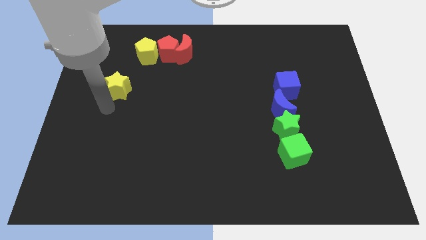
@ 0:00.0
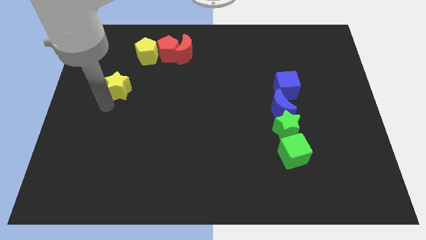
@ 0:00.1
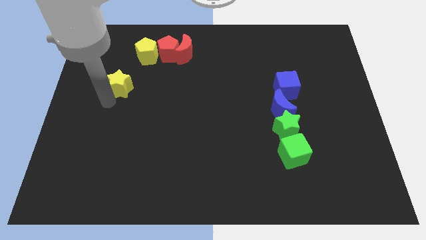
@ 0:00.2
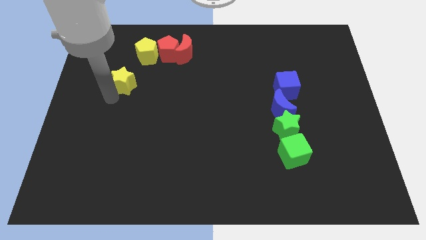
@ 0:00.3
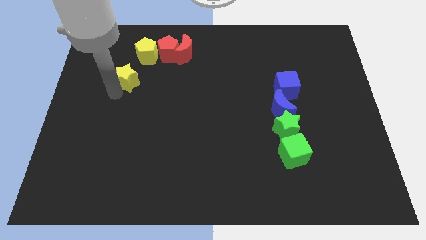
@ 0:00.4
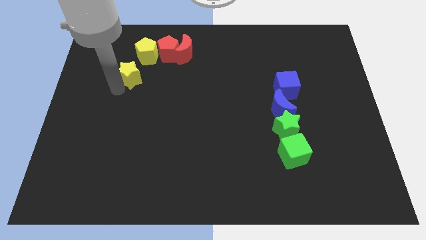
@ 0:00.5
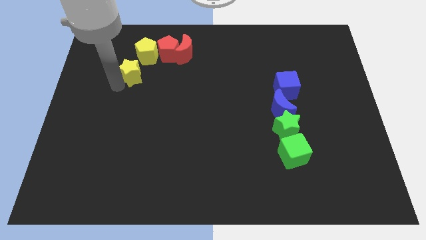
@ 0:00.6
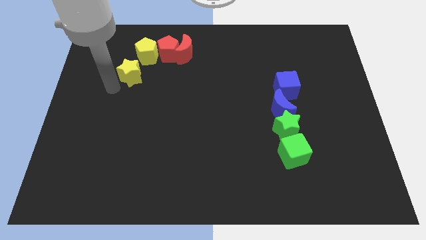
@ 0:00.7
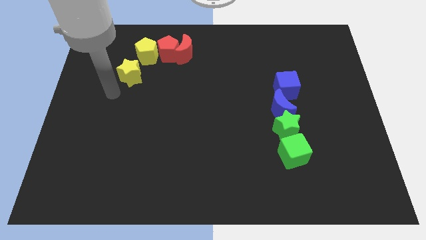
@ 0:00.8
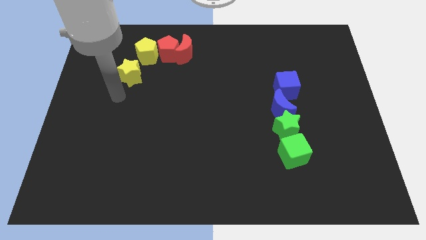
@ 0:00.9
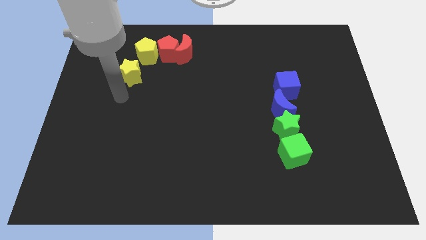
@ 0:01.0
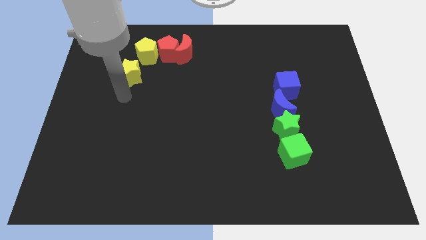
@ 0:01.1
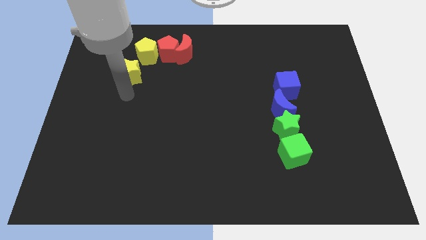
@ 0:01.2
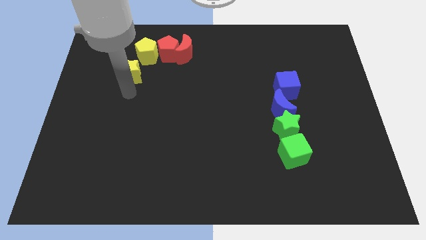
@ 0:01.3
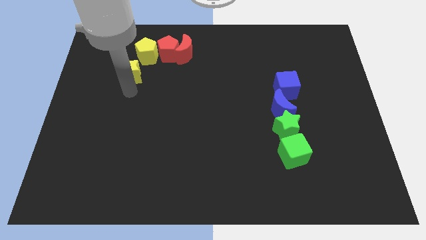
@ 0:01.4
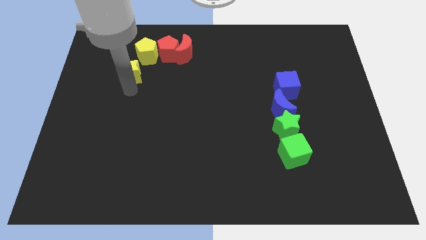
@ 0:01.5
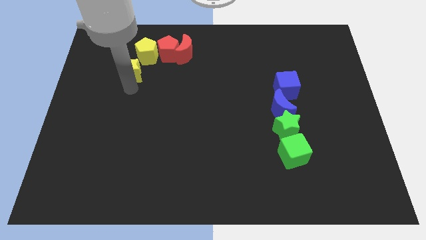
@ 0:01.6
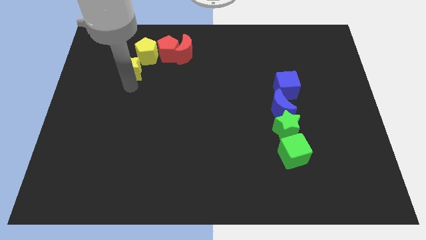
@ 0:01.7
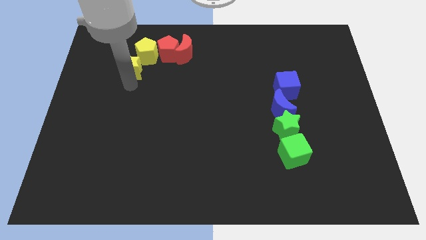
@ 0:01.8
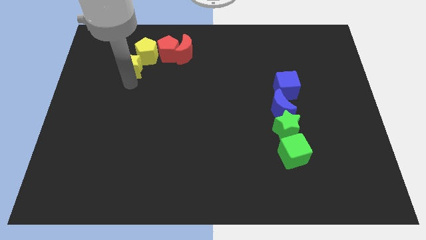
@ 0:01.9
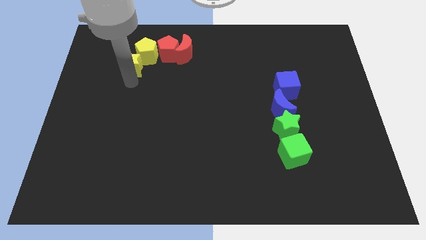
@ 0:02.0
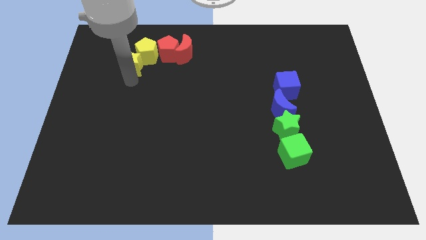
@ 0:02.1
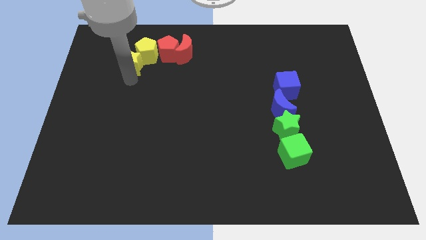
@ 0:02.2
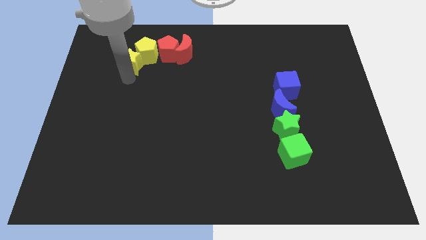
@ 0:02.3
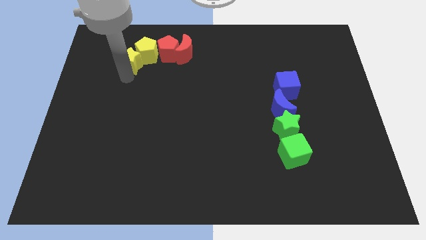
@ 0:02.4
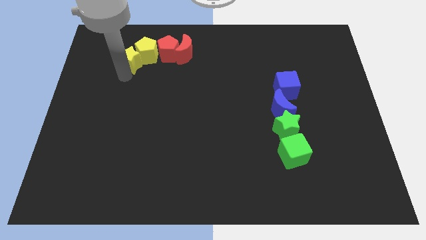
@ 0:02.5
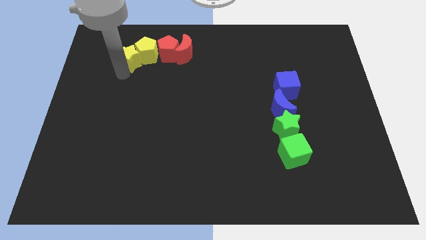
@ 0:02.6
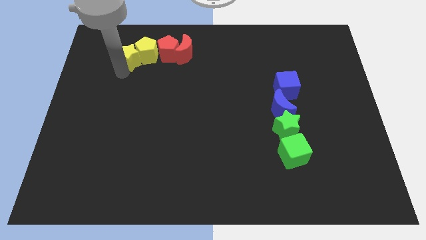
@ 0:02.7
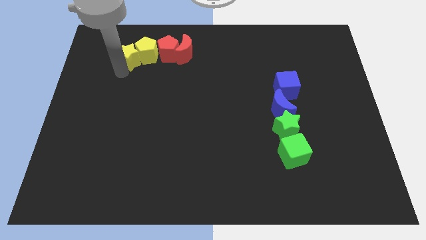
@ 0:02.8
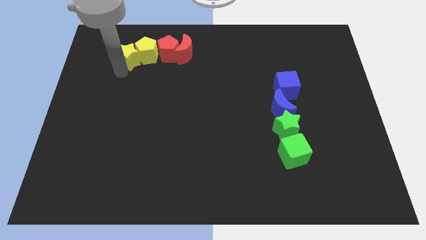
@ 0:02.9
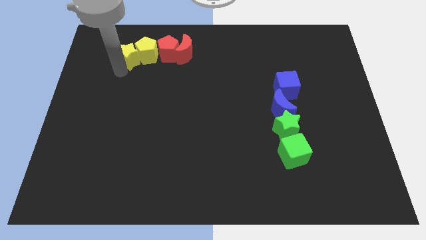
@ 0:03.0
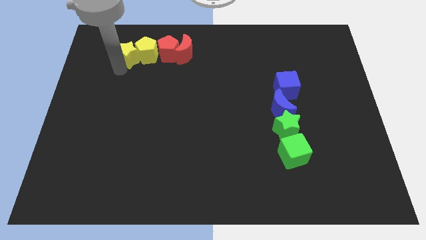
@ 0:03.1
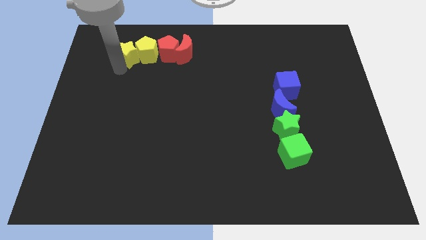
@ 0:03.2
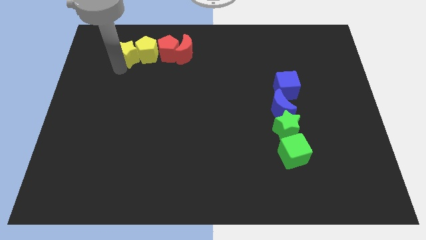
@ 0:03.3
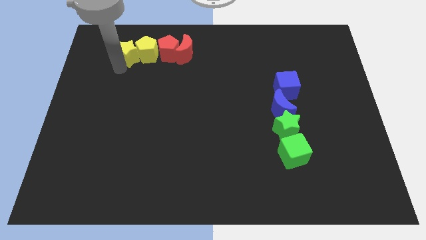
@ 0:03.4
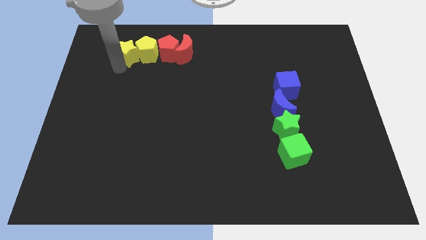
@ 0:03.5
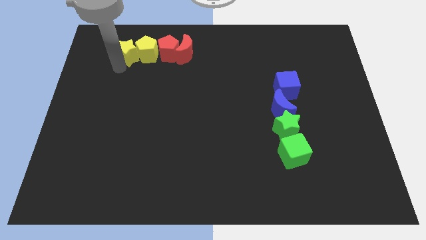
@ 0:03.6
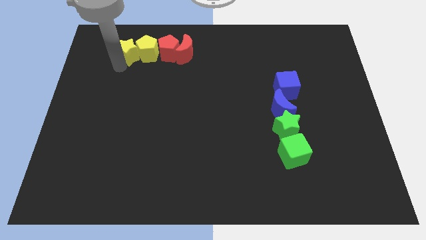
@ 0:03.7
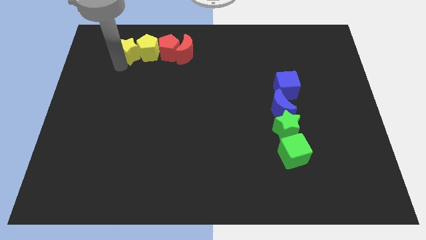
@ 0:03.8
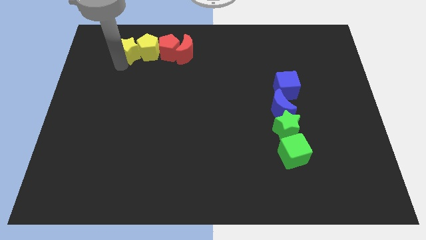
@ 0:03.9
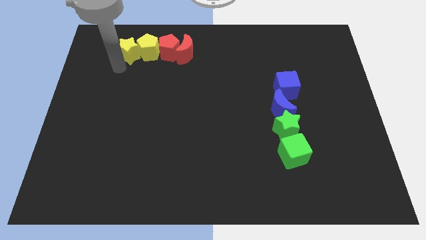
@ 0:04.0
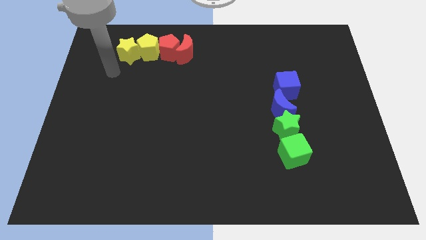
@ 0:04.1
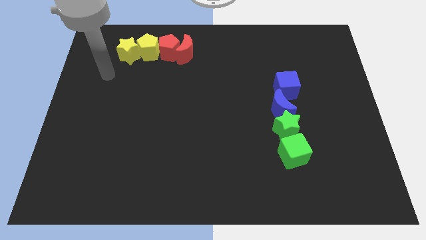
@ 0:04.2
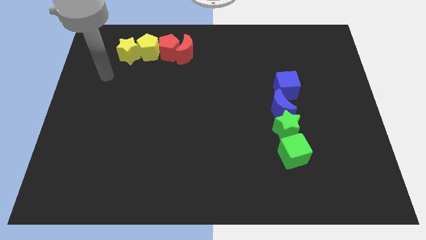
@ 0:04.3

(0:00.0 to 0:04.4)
put the yellow star parallel left to the yellow pentagon

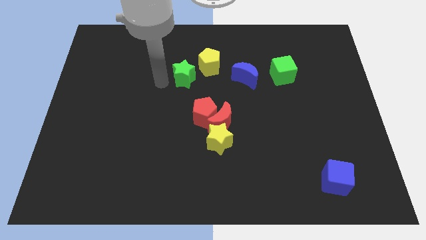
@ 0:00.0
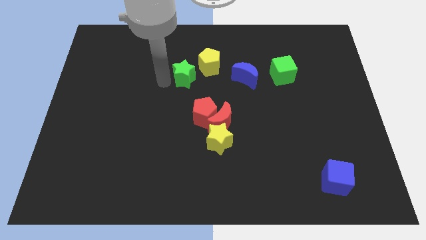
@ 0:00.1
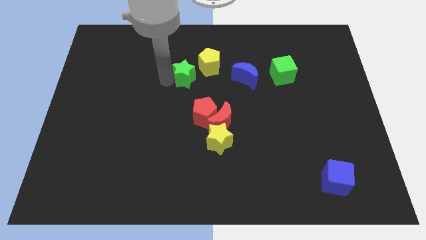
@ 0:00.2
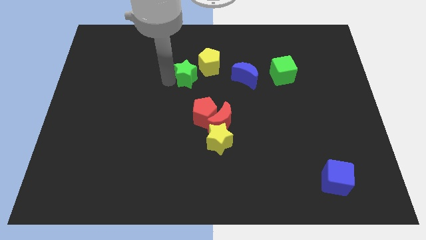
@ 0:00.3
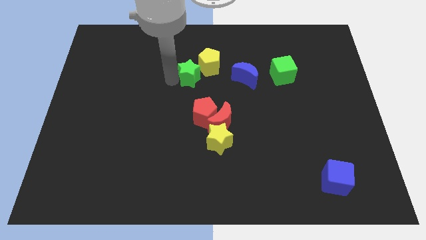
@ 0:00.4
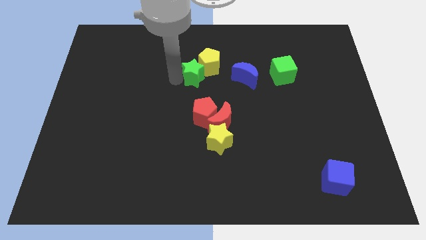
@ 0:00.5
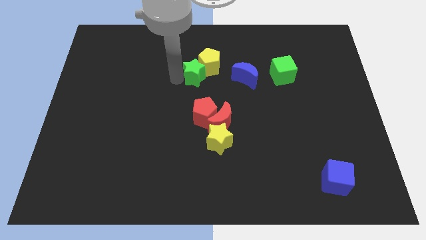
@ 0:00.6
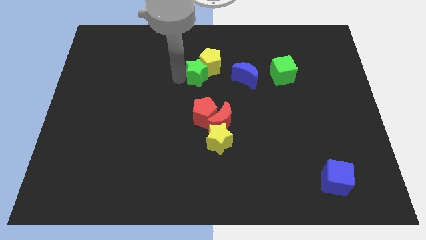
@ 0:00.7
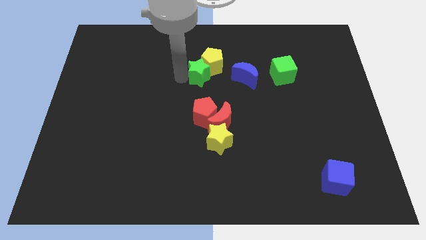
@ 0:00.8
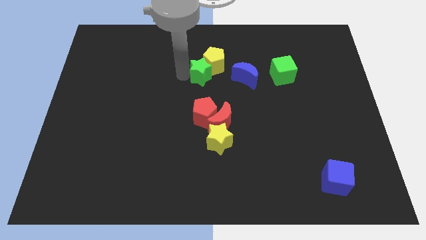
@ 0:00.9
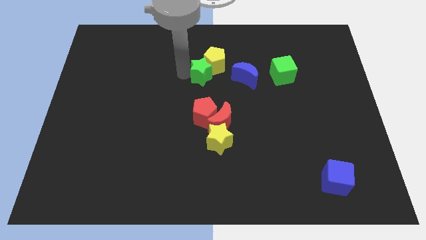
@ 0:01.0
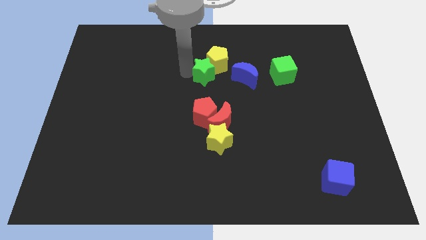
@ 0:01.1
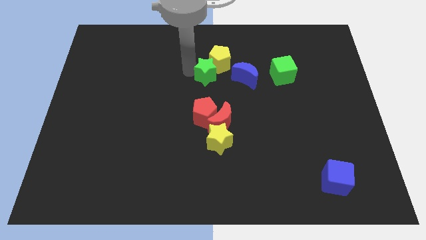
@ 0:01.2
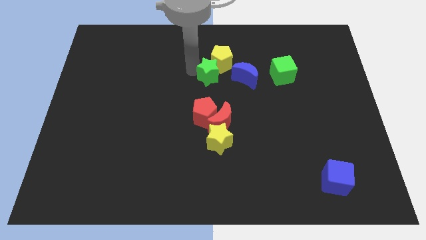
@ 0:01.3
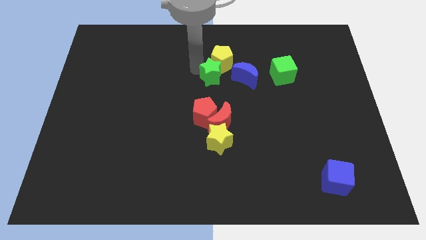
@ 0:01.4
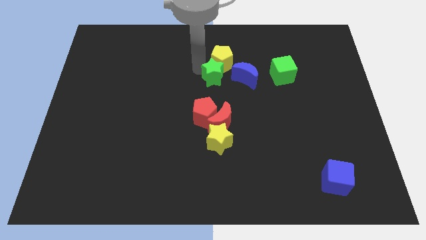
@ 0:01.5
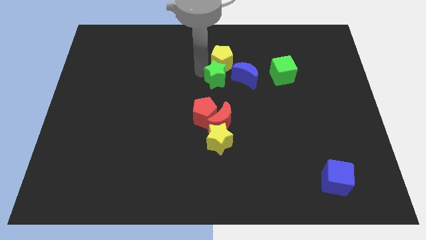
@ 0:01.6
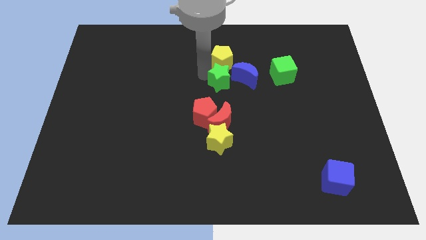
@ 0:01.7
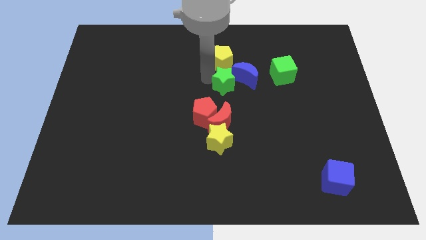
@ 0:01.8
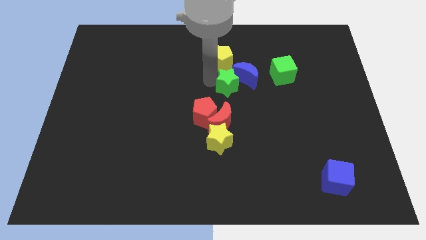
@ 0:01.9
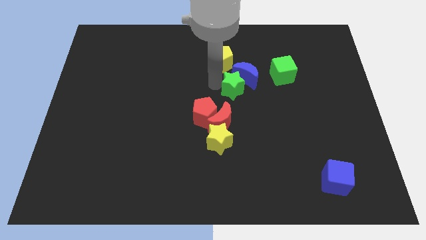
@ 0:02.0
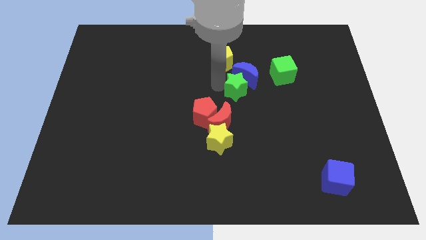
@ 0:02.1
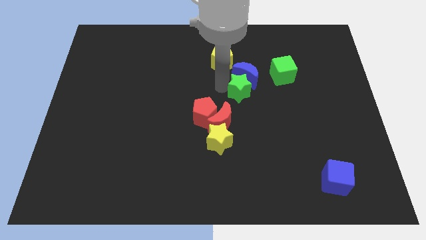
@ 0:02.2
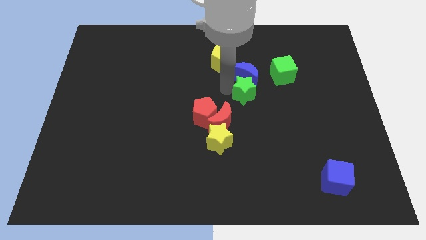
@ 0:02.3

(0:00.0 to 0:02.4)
move the green star to the bottom of the blue crescent

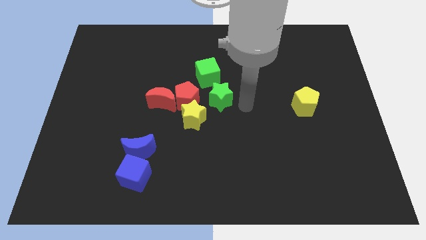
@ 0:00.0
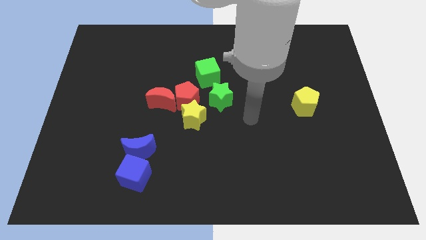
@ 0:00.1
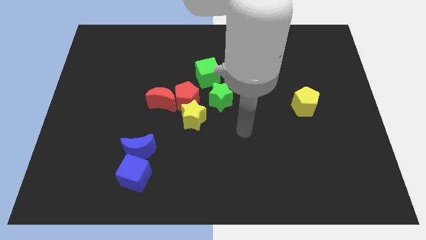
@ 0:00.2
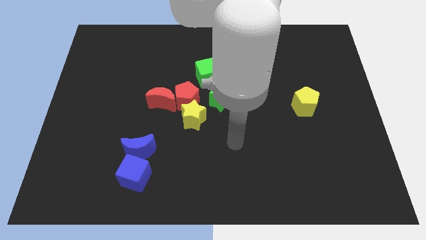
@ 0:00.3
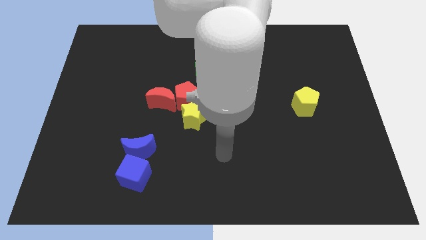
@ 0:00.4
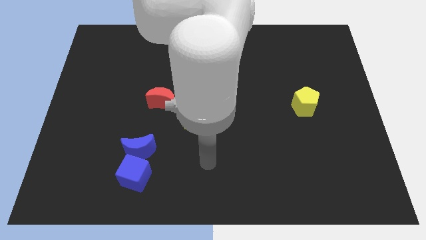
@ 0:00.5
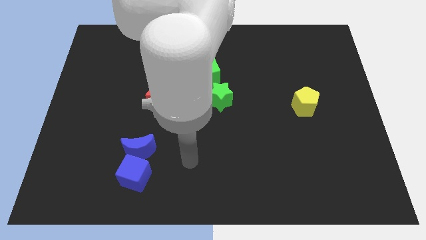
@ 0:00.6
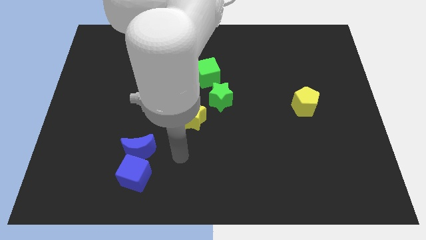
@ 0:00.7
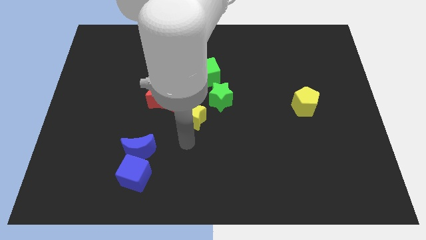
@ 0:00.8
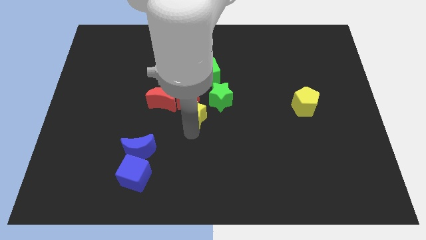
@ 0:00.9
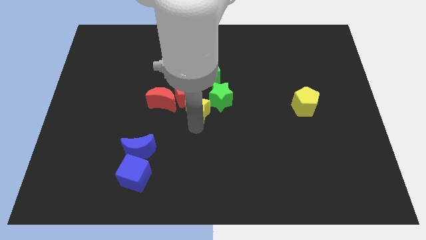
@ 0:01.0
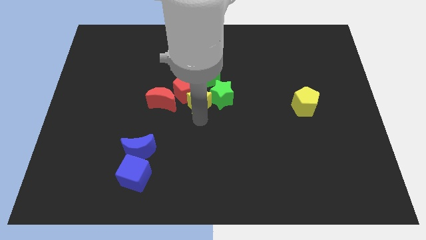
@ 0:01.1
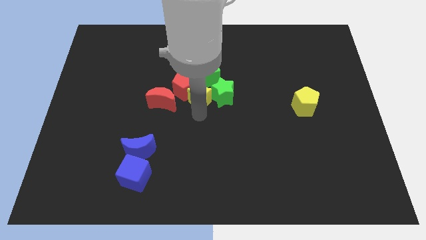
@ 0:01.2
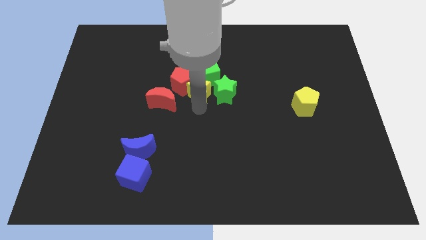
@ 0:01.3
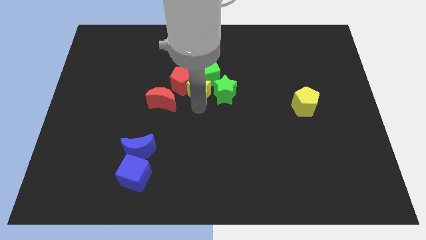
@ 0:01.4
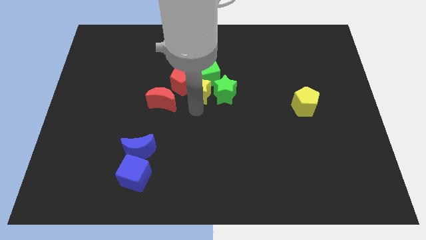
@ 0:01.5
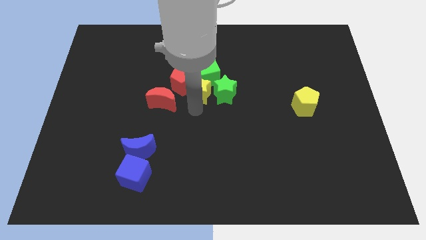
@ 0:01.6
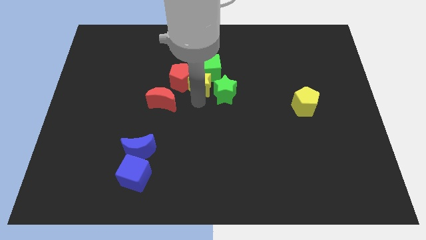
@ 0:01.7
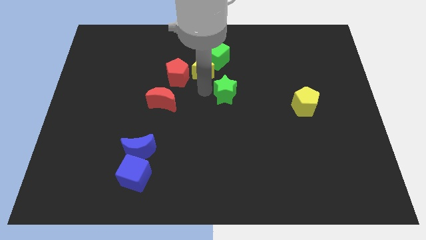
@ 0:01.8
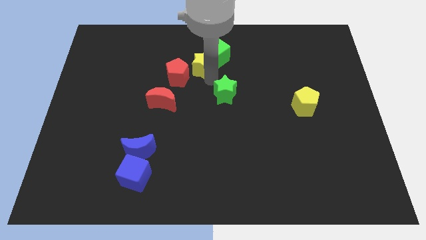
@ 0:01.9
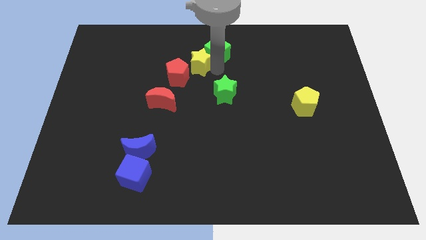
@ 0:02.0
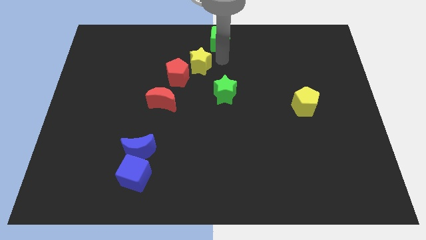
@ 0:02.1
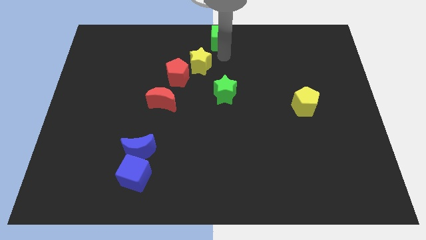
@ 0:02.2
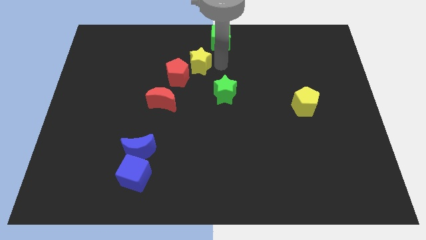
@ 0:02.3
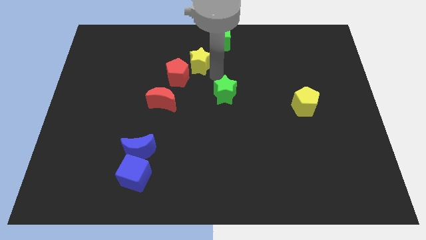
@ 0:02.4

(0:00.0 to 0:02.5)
place the green cube to the top middle of the board
